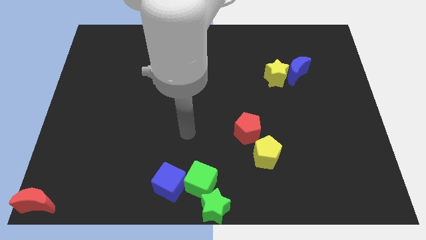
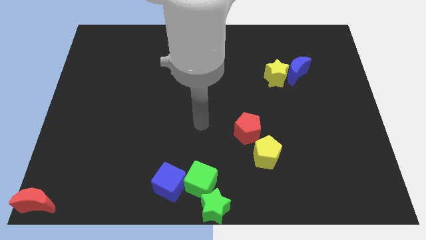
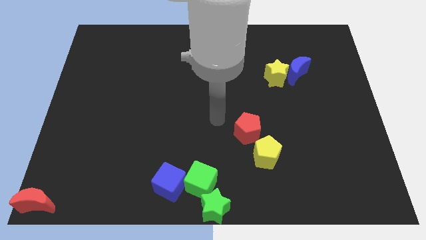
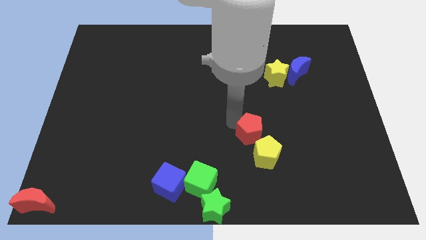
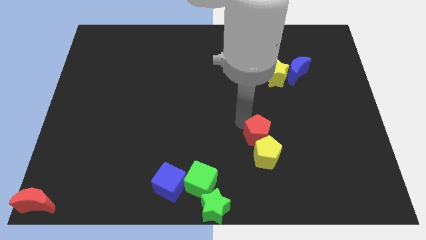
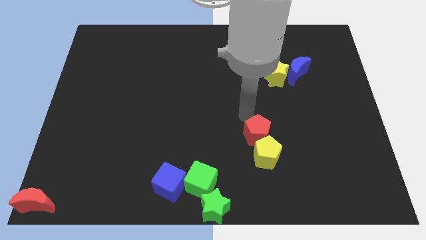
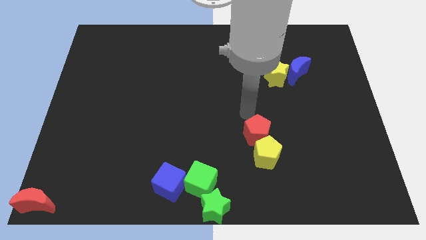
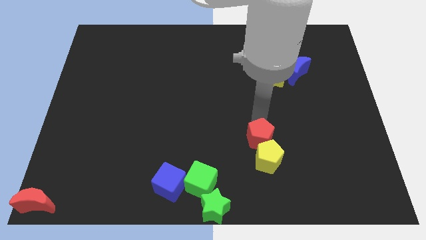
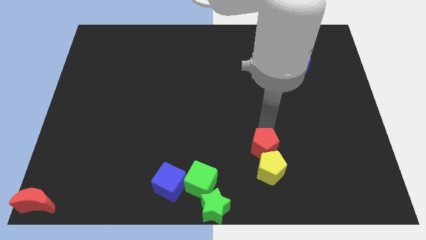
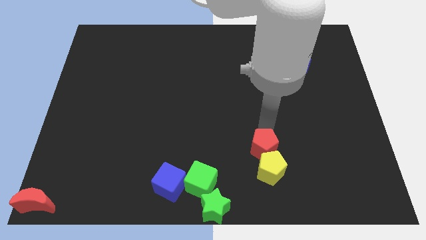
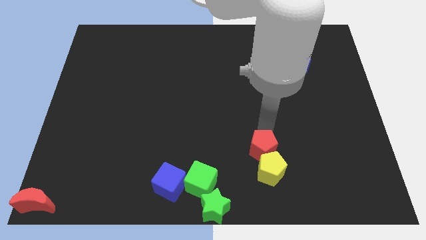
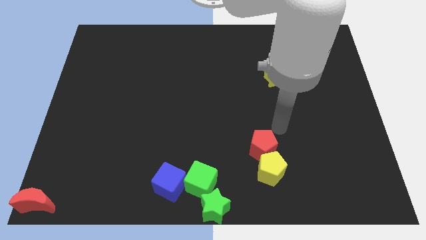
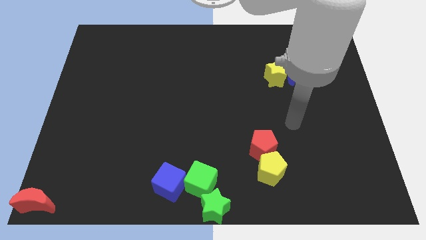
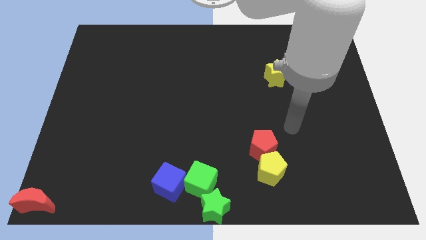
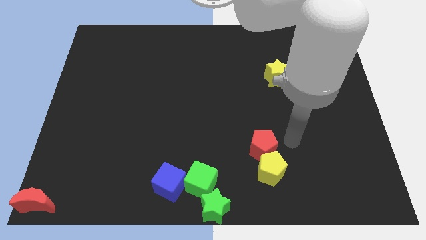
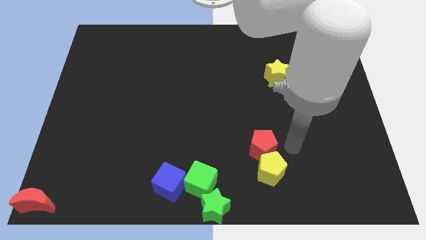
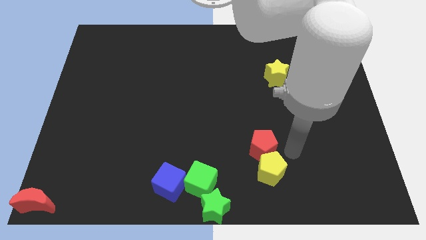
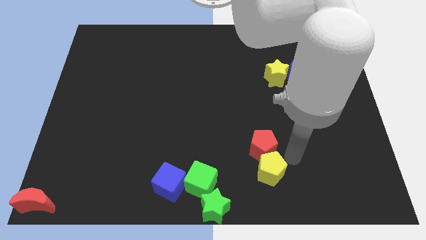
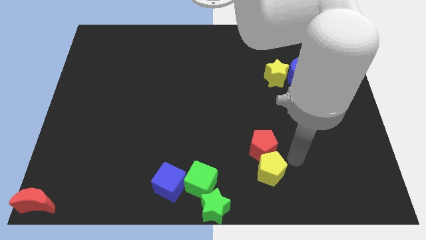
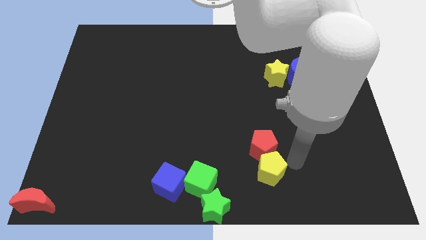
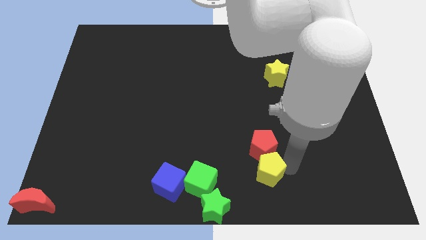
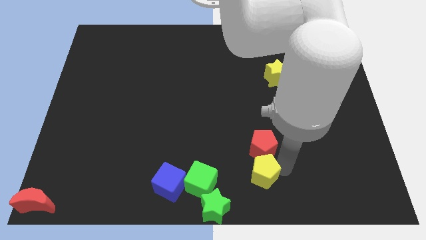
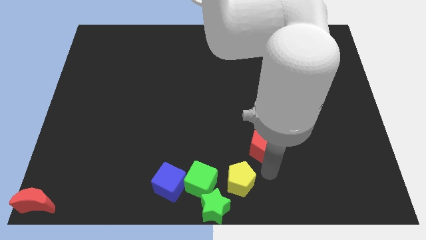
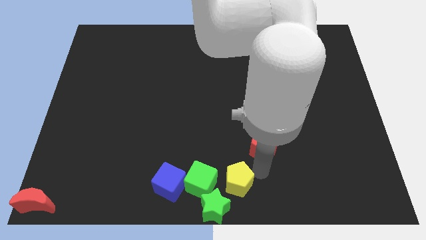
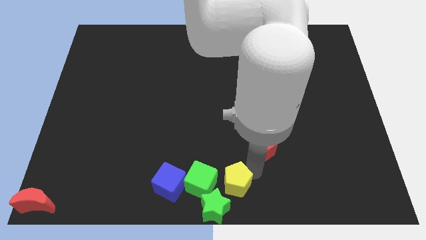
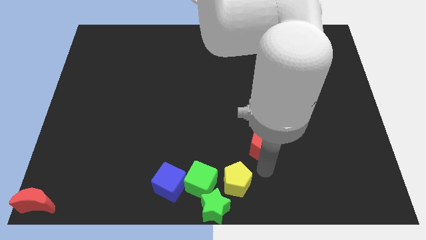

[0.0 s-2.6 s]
push the yellow pentagon to the right of green cube

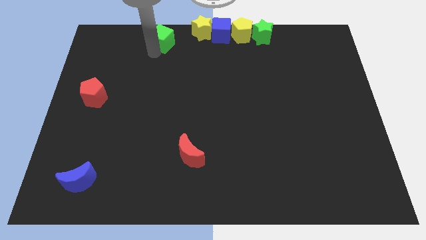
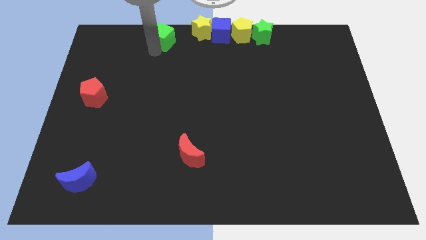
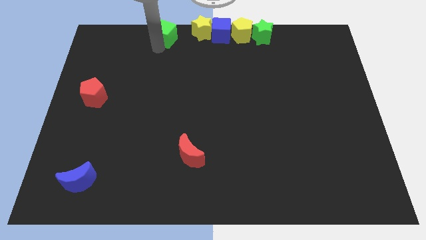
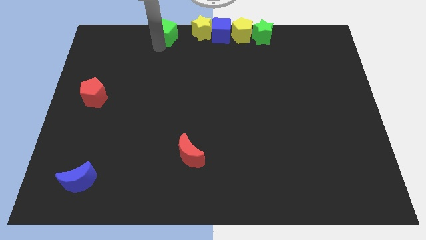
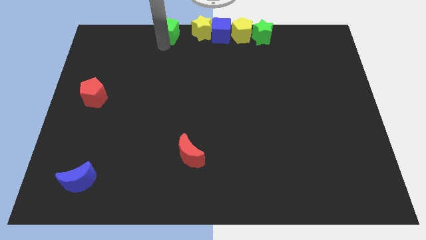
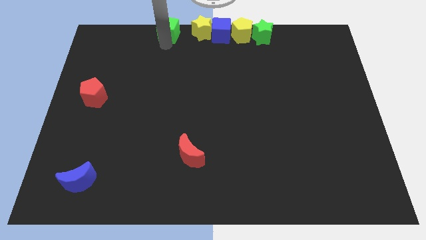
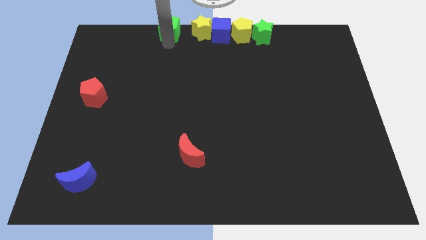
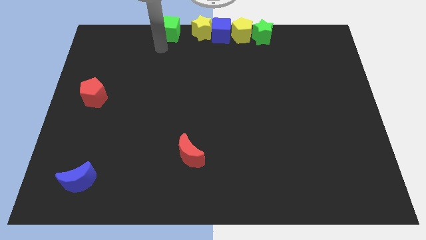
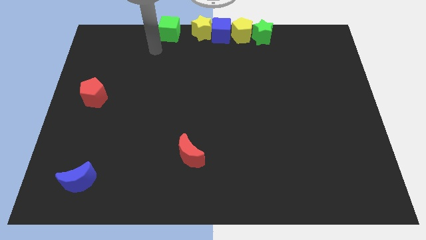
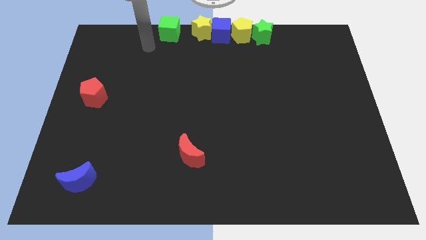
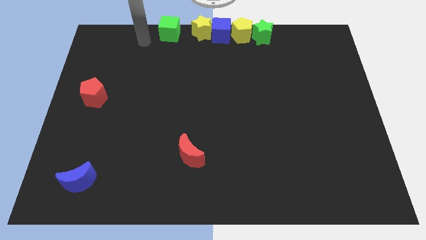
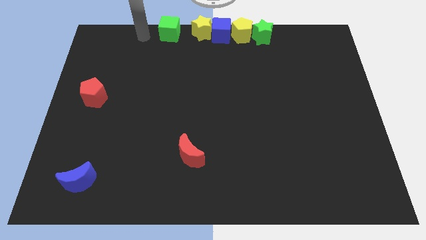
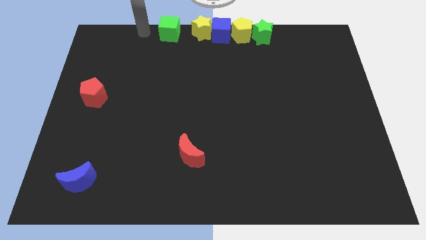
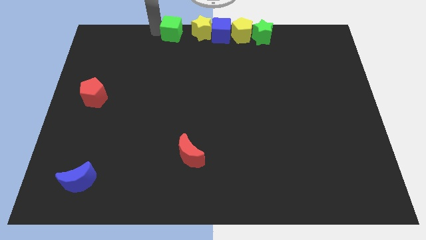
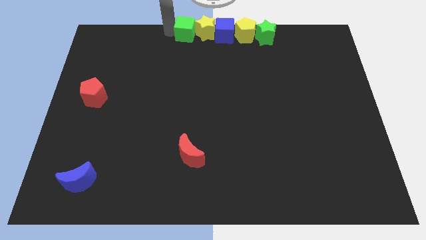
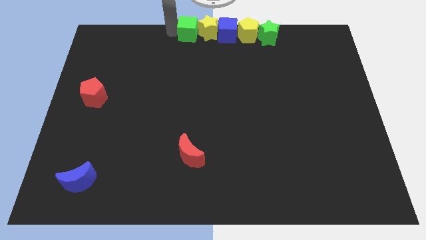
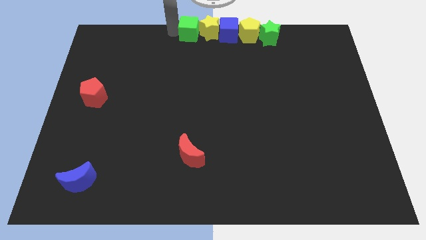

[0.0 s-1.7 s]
push the green cube into the yellow star

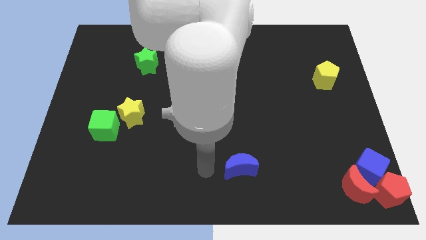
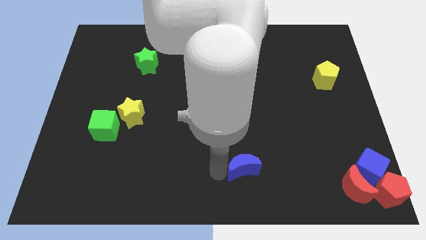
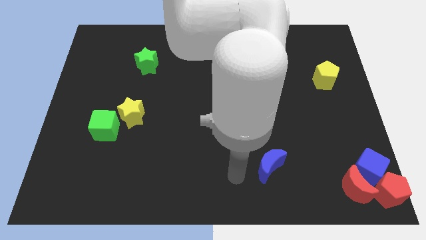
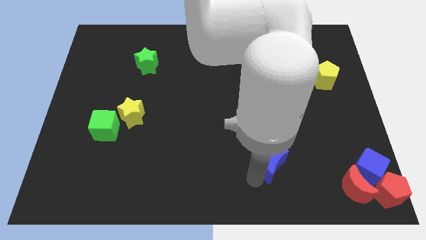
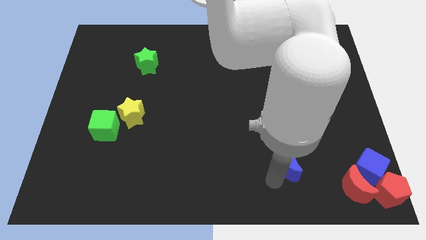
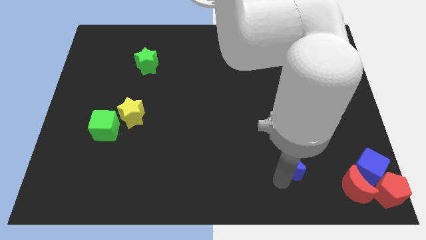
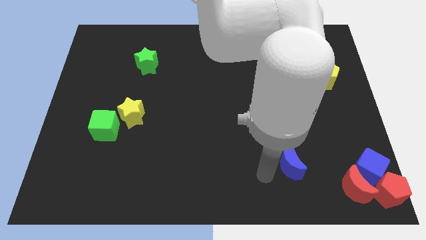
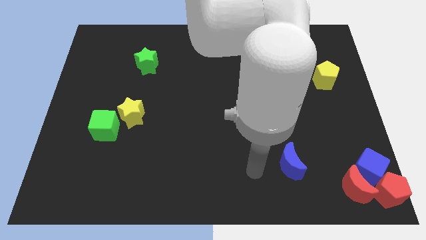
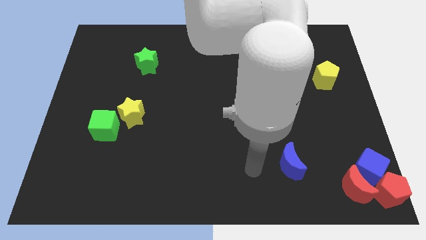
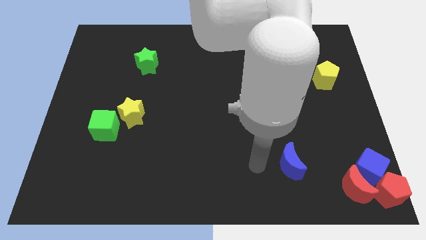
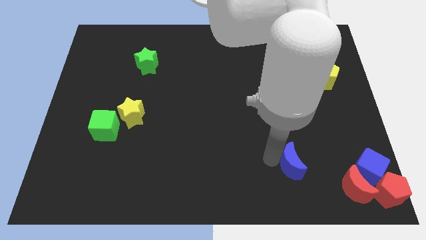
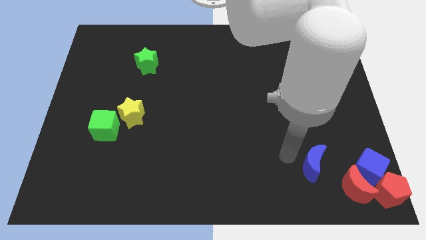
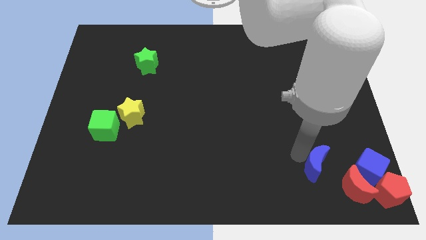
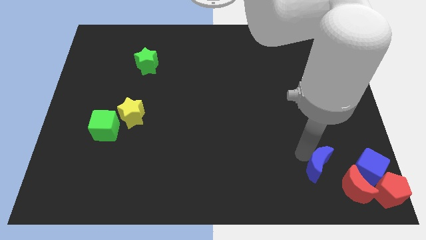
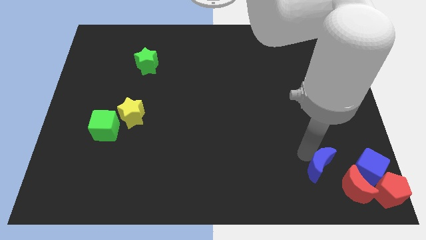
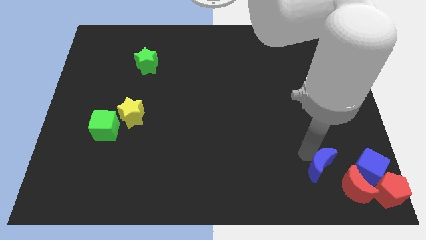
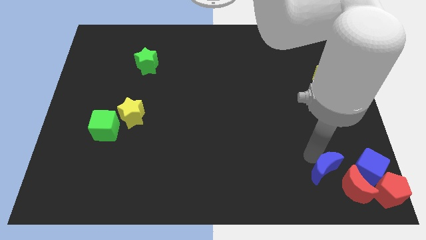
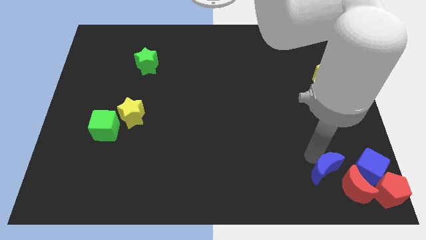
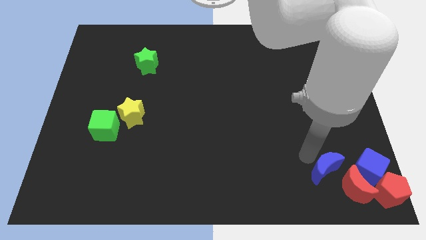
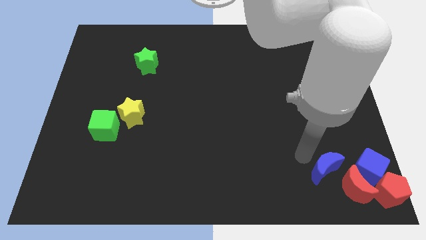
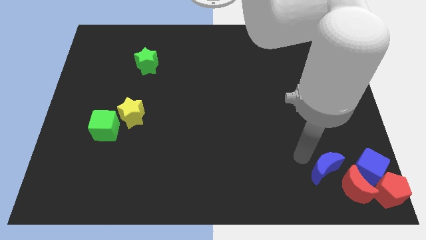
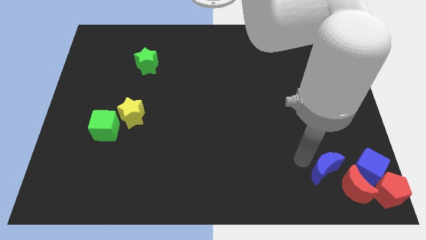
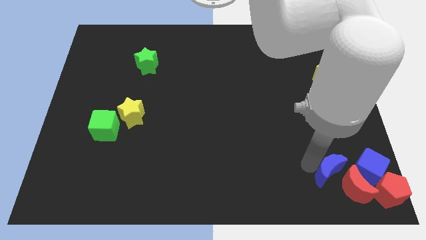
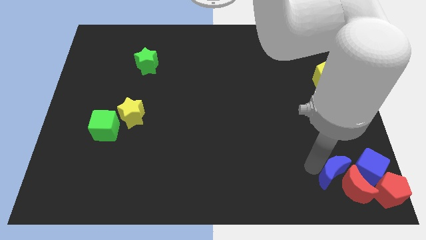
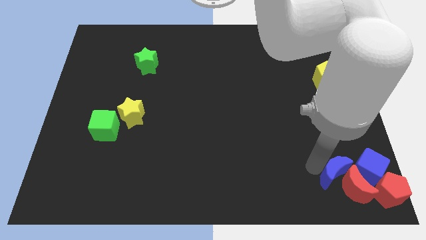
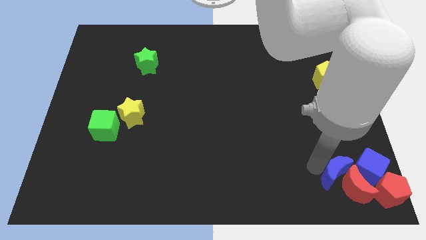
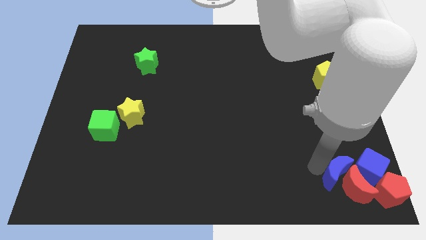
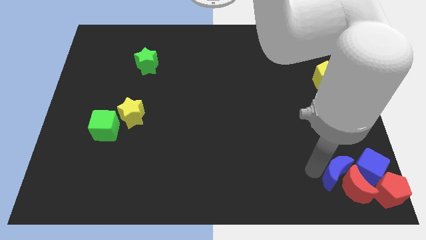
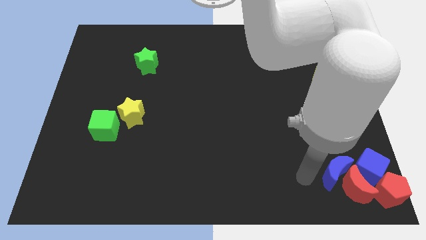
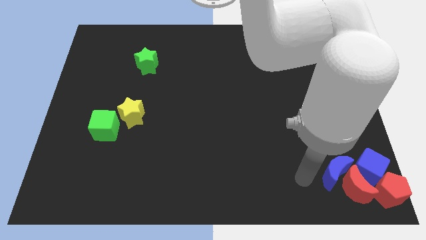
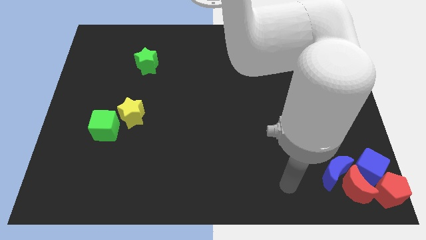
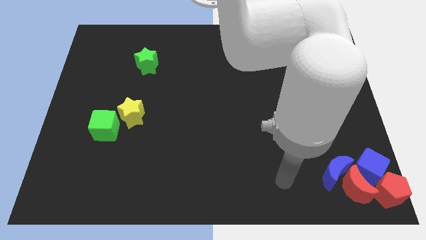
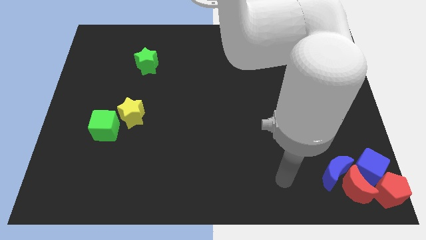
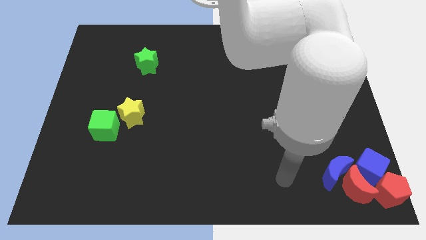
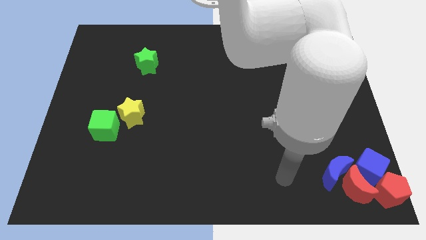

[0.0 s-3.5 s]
move the blue crescent close to the red moon

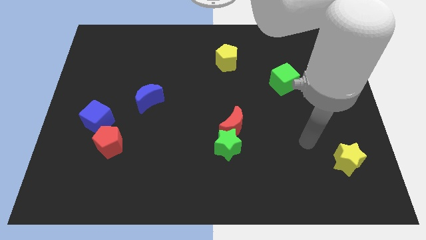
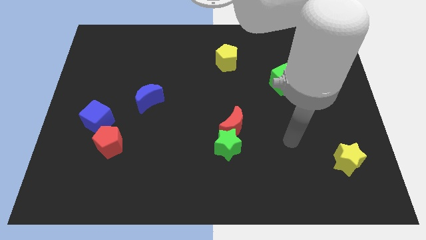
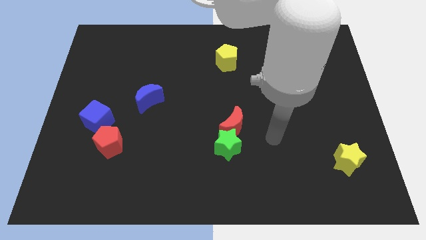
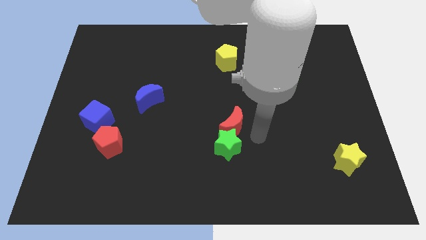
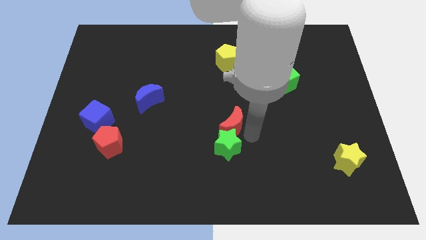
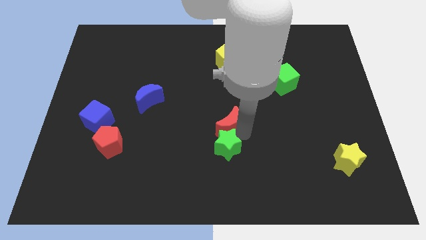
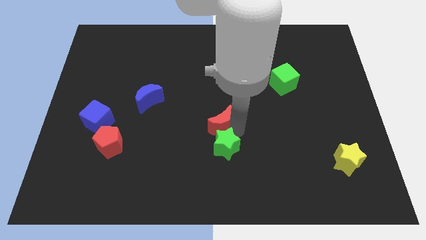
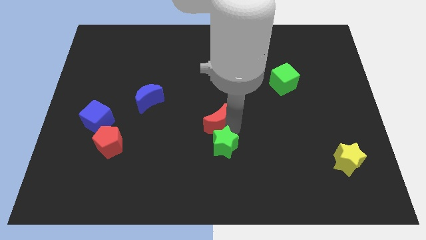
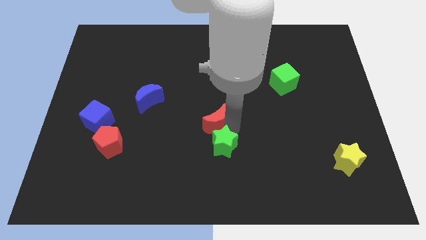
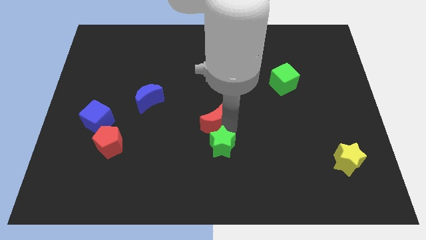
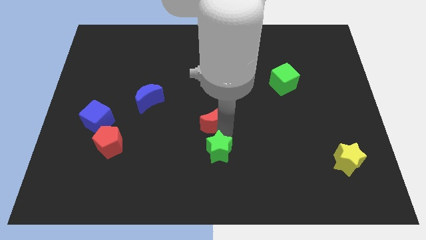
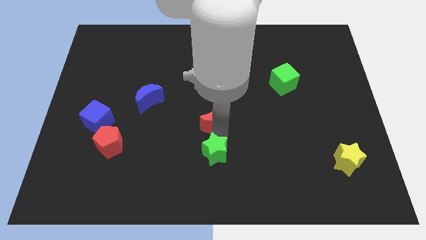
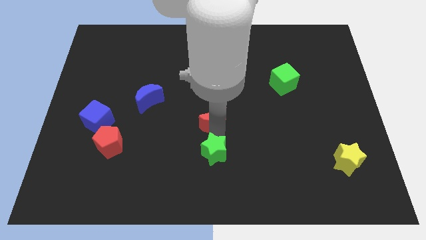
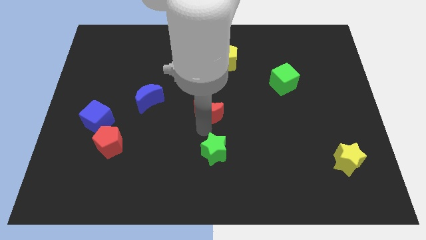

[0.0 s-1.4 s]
place your arm in between the green star and red crescent
